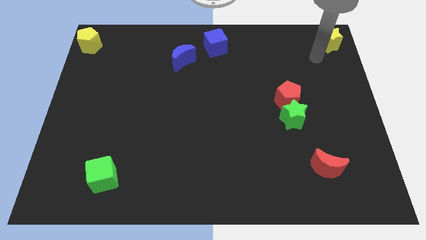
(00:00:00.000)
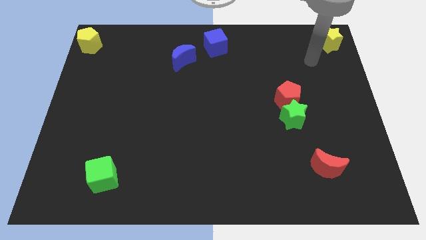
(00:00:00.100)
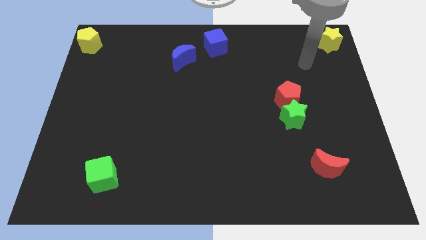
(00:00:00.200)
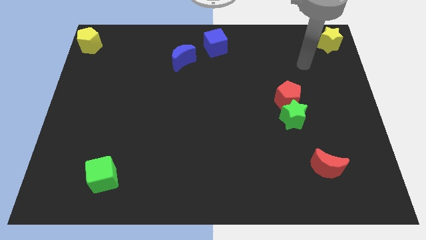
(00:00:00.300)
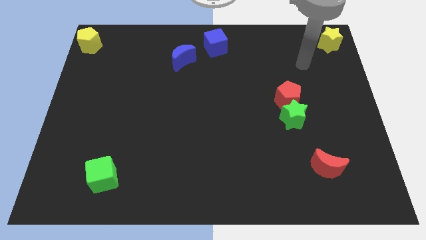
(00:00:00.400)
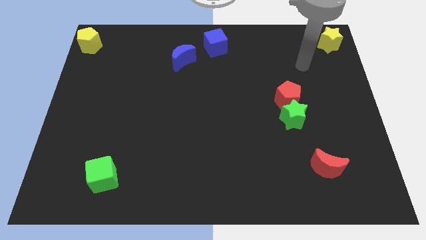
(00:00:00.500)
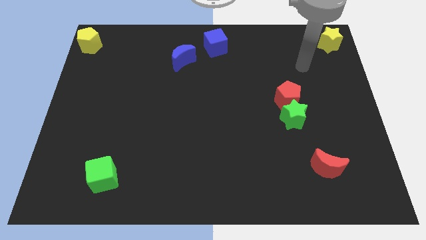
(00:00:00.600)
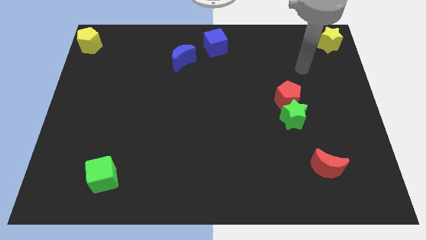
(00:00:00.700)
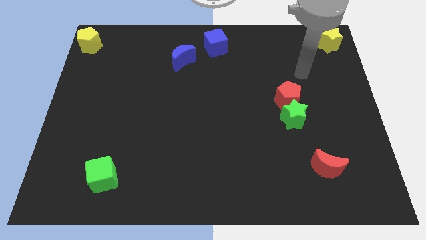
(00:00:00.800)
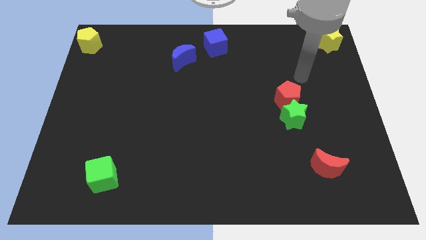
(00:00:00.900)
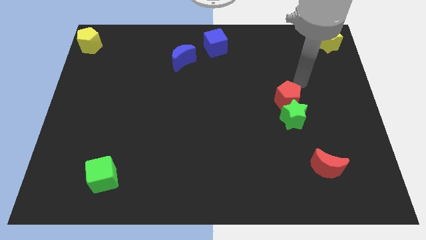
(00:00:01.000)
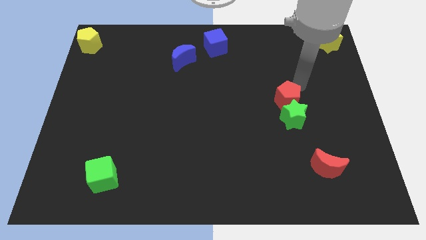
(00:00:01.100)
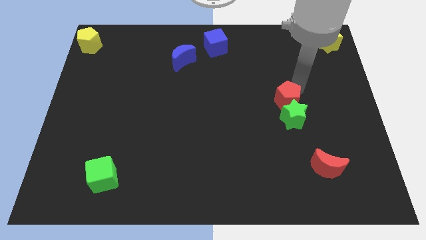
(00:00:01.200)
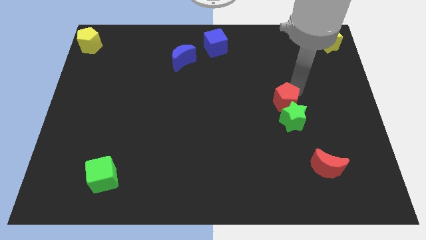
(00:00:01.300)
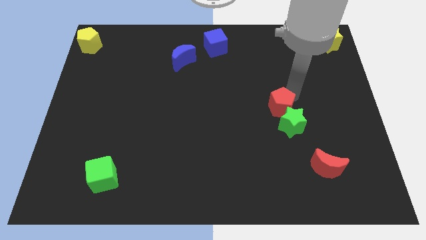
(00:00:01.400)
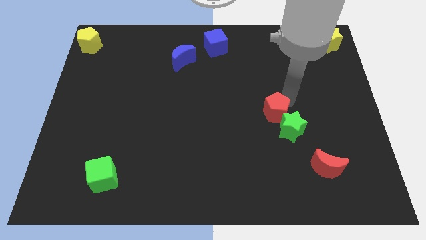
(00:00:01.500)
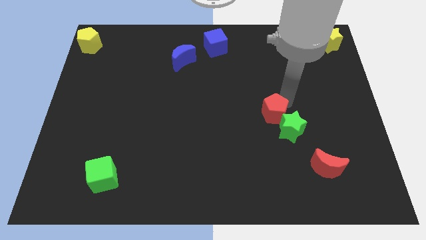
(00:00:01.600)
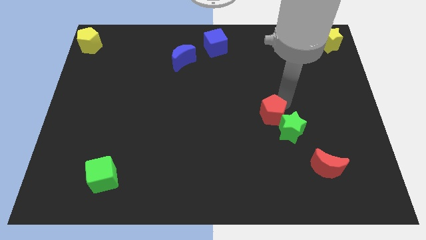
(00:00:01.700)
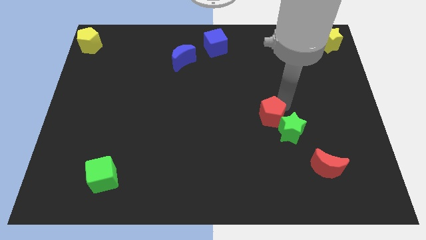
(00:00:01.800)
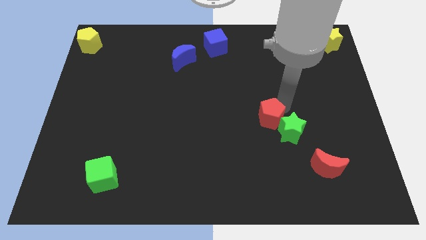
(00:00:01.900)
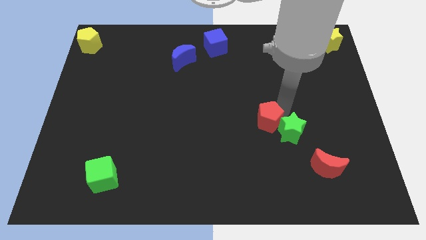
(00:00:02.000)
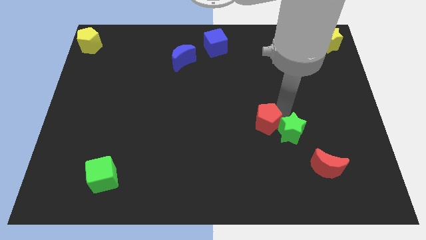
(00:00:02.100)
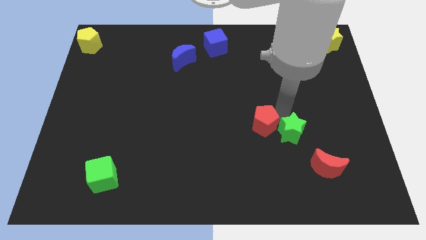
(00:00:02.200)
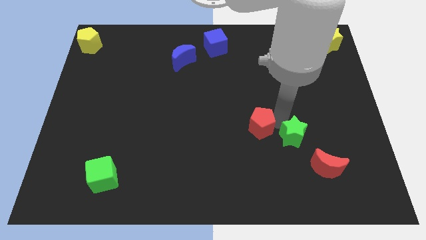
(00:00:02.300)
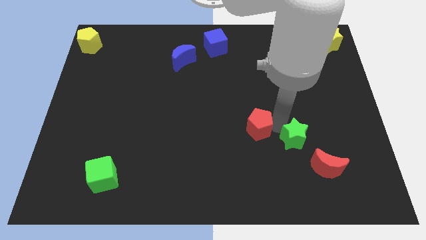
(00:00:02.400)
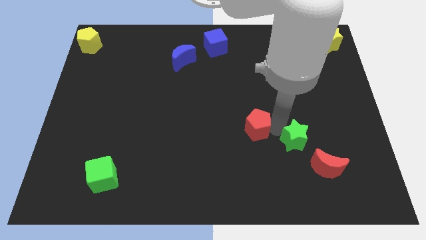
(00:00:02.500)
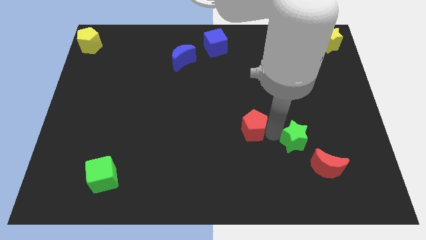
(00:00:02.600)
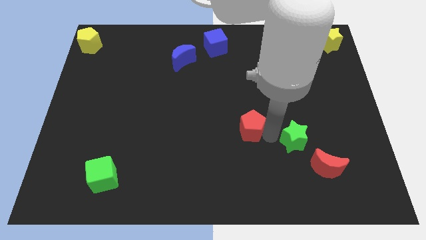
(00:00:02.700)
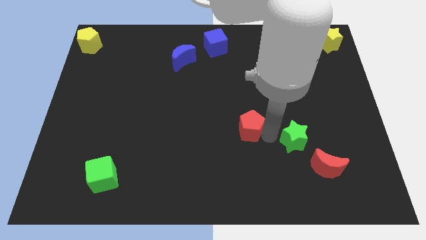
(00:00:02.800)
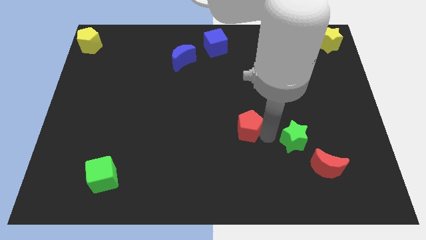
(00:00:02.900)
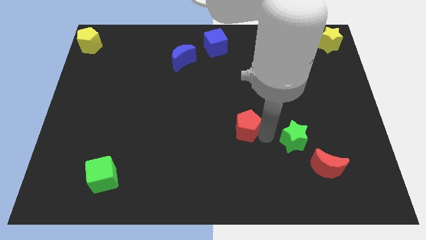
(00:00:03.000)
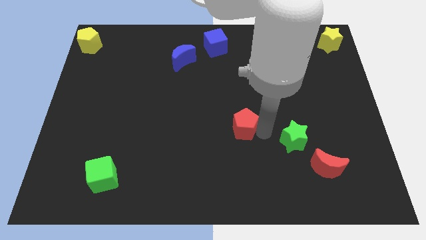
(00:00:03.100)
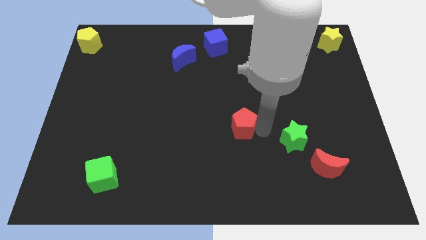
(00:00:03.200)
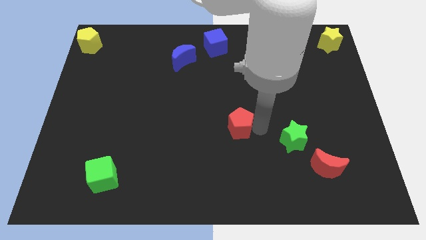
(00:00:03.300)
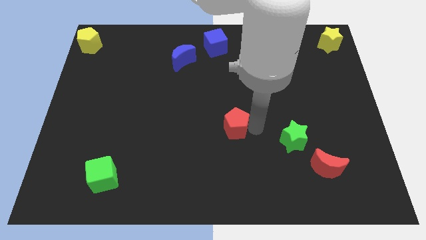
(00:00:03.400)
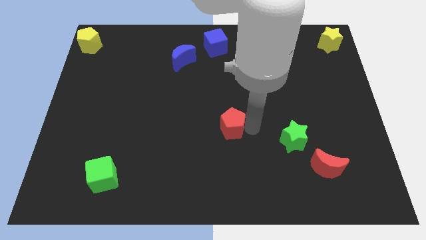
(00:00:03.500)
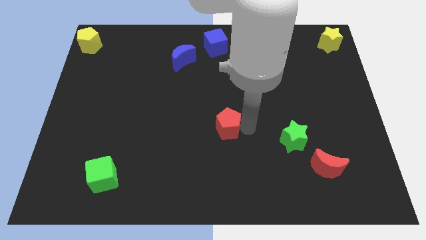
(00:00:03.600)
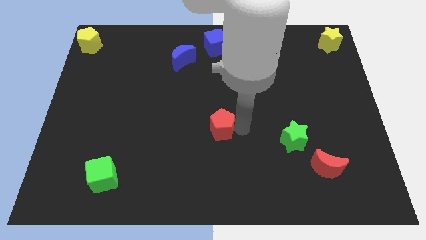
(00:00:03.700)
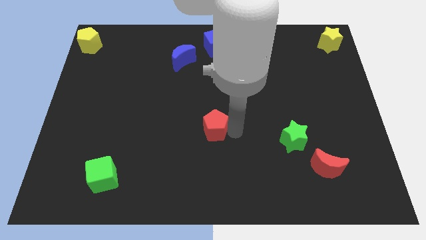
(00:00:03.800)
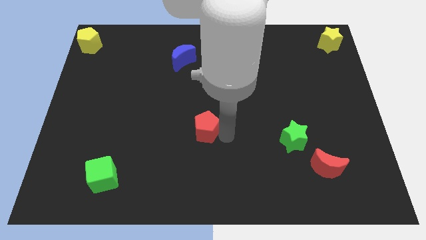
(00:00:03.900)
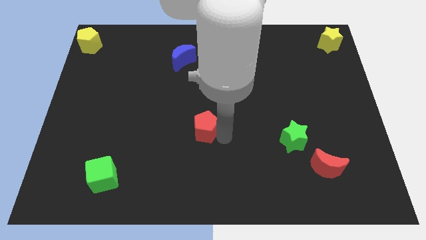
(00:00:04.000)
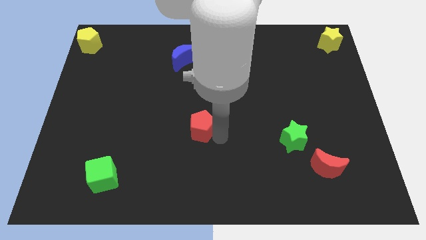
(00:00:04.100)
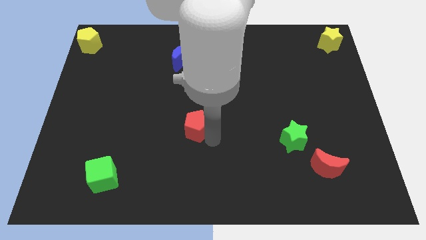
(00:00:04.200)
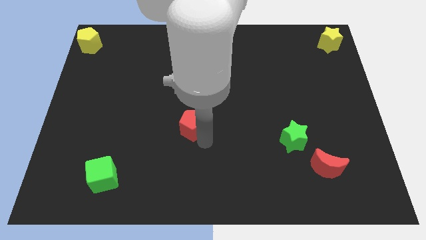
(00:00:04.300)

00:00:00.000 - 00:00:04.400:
separate the red pentagon from the green star

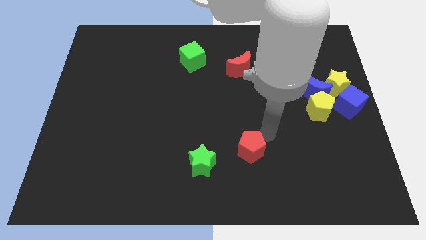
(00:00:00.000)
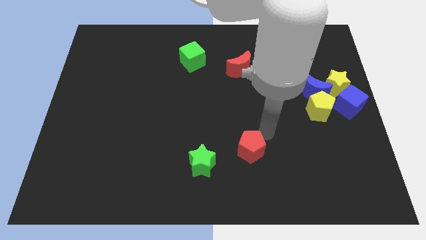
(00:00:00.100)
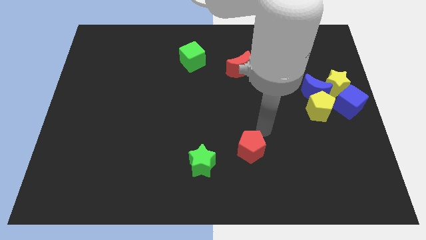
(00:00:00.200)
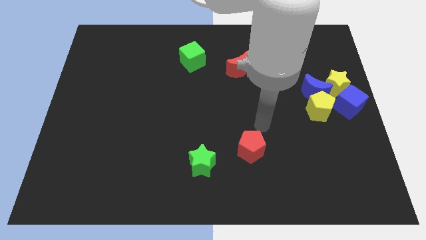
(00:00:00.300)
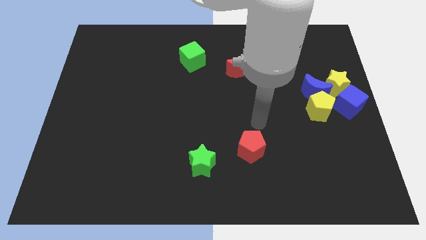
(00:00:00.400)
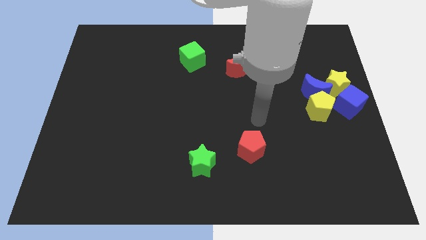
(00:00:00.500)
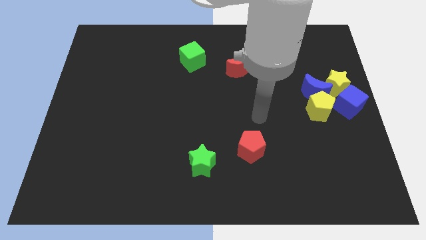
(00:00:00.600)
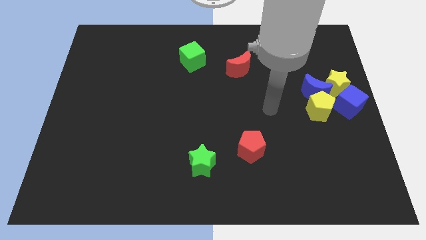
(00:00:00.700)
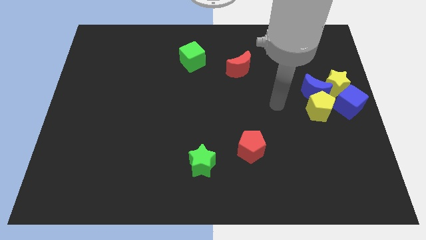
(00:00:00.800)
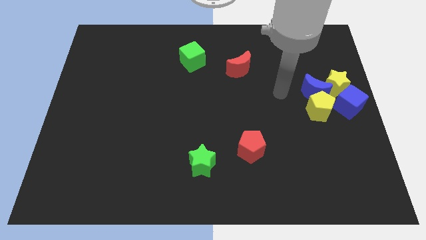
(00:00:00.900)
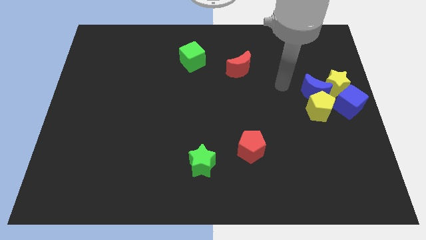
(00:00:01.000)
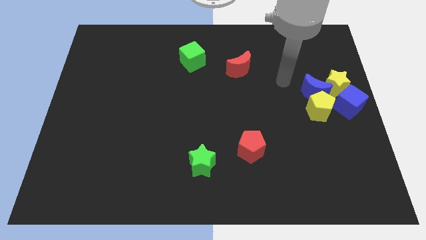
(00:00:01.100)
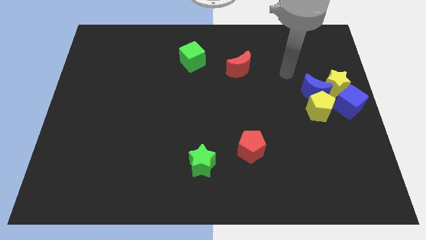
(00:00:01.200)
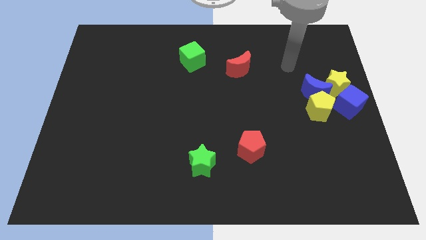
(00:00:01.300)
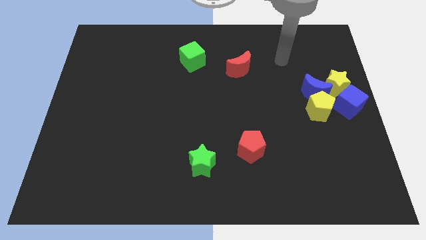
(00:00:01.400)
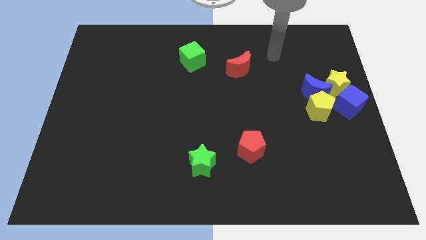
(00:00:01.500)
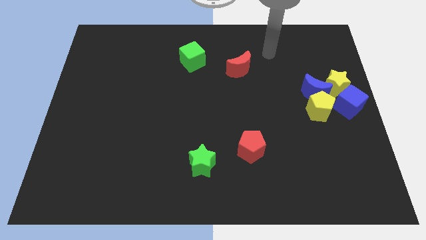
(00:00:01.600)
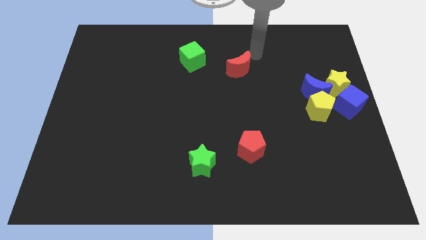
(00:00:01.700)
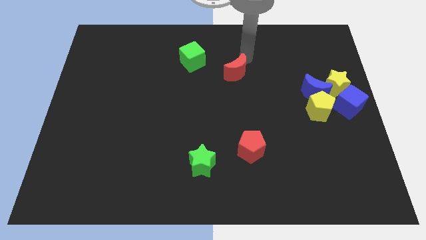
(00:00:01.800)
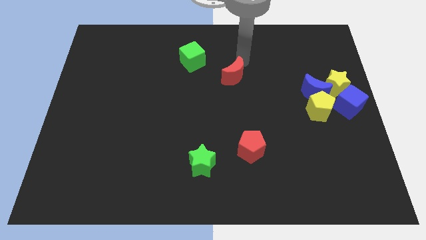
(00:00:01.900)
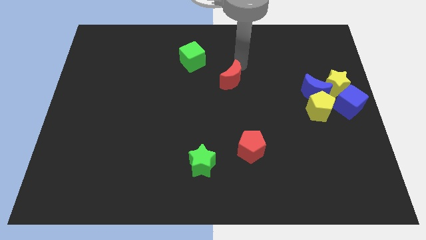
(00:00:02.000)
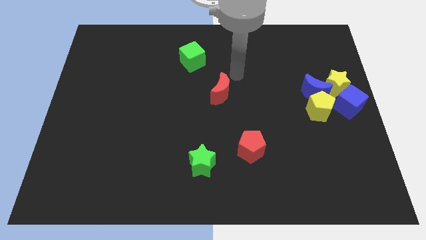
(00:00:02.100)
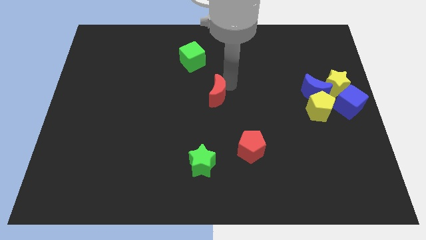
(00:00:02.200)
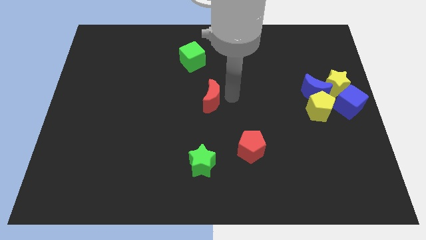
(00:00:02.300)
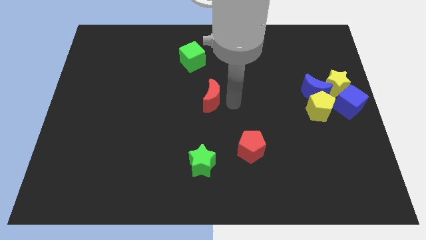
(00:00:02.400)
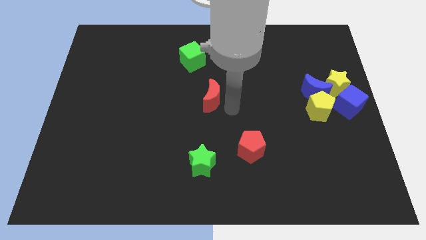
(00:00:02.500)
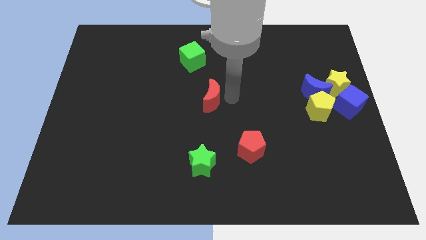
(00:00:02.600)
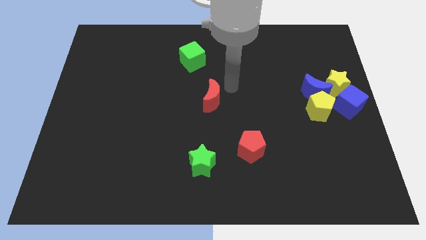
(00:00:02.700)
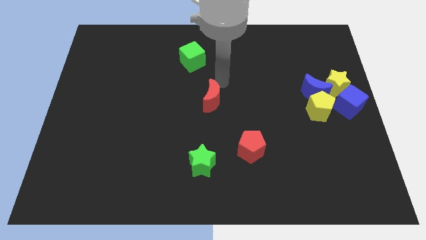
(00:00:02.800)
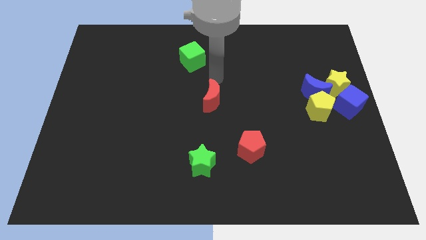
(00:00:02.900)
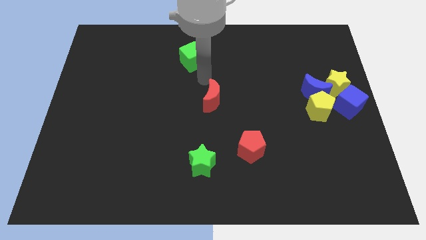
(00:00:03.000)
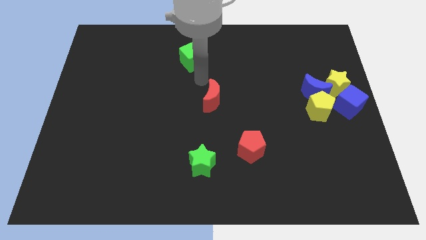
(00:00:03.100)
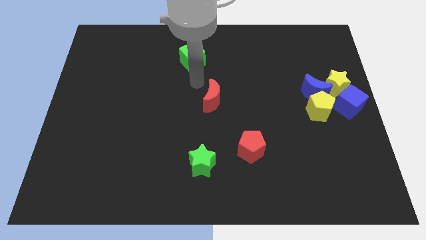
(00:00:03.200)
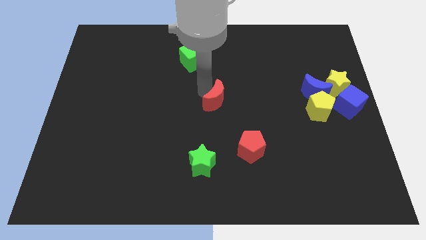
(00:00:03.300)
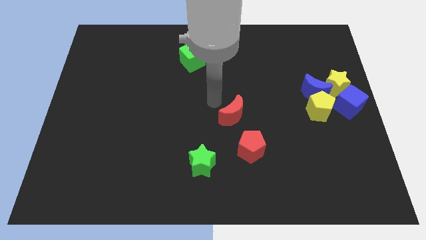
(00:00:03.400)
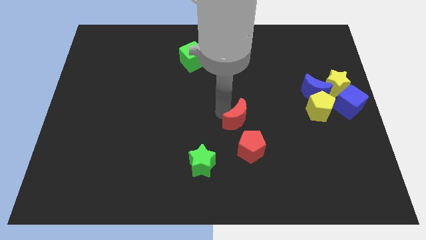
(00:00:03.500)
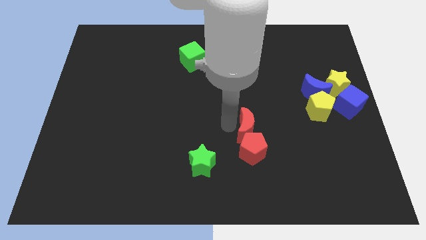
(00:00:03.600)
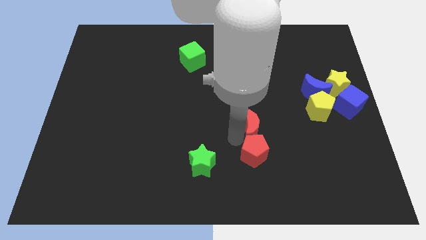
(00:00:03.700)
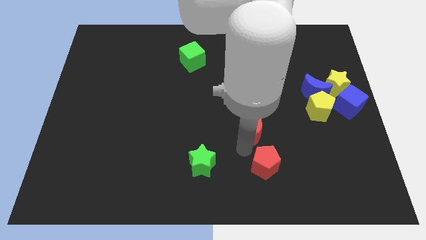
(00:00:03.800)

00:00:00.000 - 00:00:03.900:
push the red crescent to the top of the red pentagon

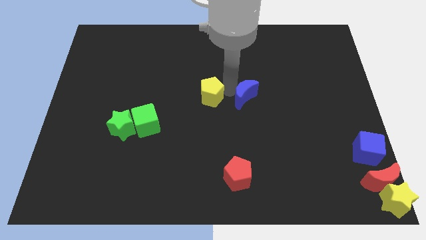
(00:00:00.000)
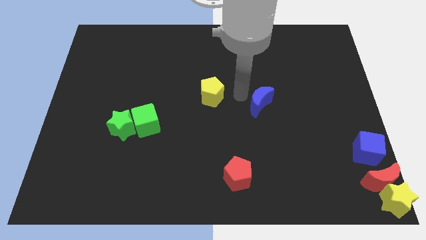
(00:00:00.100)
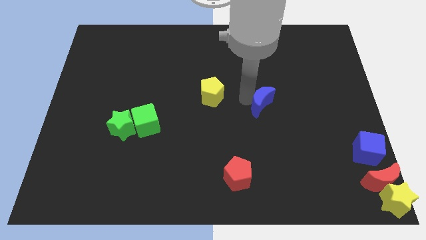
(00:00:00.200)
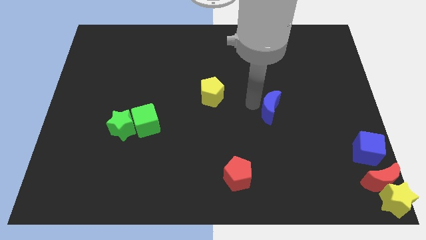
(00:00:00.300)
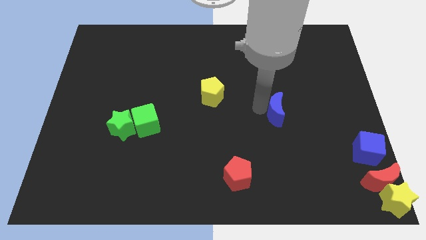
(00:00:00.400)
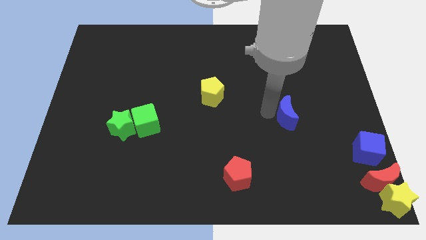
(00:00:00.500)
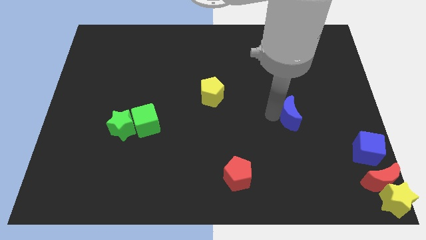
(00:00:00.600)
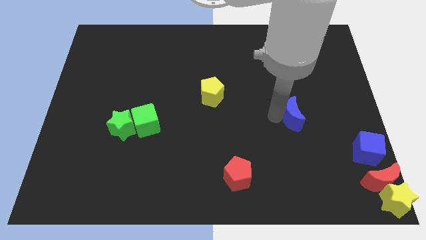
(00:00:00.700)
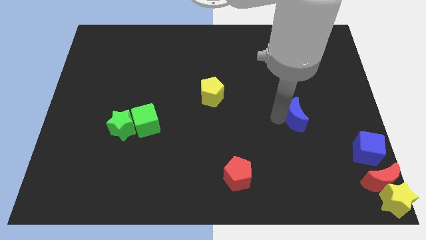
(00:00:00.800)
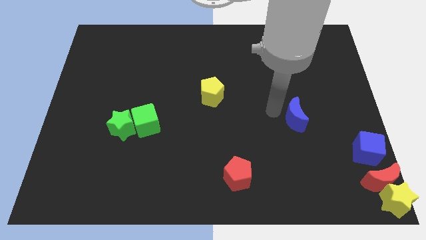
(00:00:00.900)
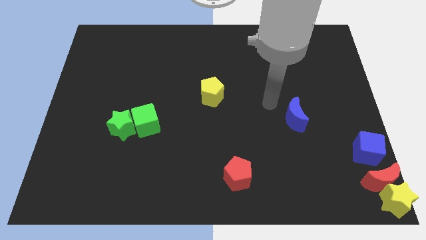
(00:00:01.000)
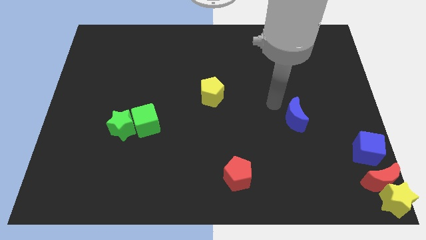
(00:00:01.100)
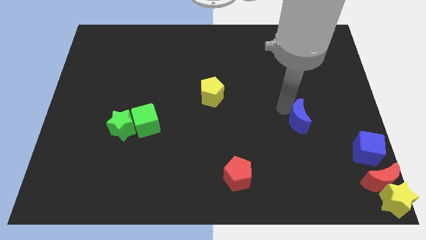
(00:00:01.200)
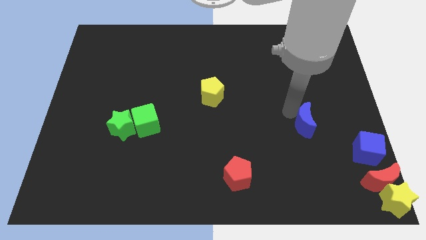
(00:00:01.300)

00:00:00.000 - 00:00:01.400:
push the blue moon towards the blue cube
